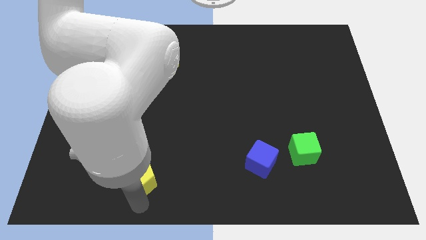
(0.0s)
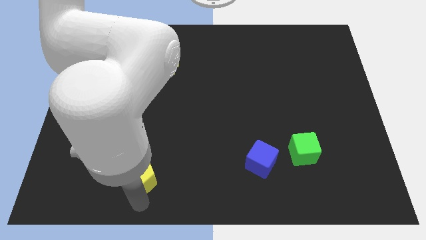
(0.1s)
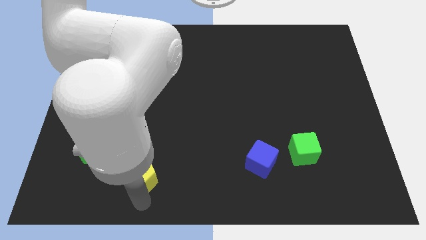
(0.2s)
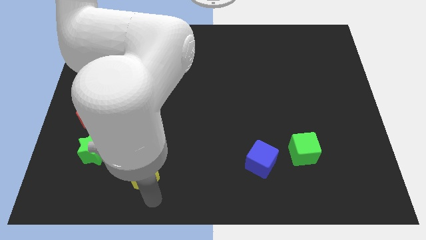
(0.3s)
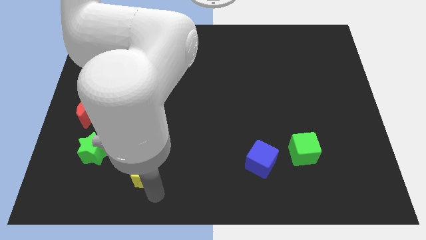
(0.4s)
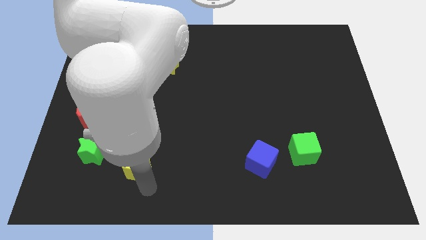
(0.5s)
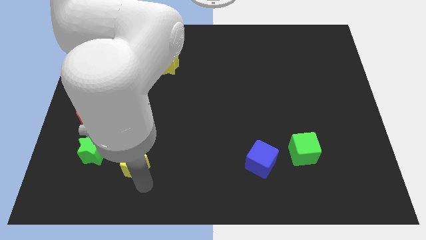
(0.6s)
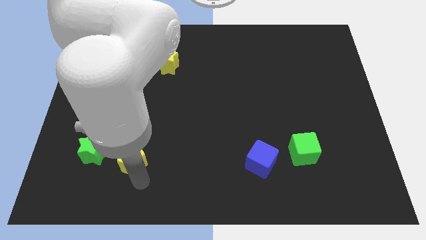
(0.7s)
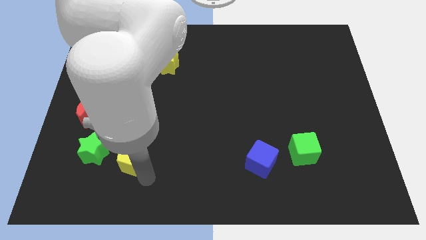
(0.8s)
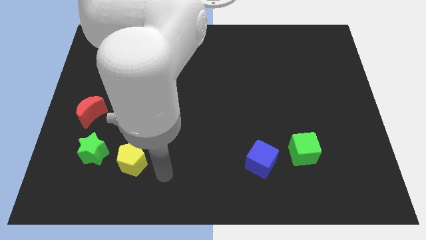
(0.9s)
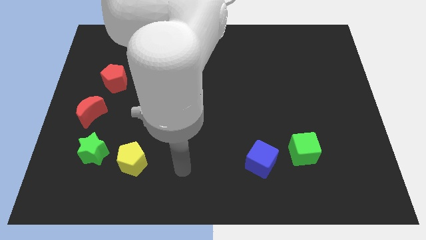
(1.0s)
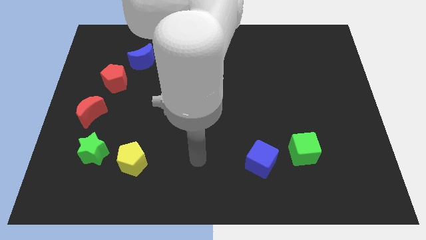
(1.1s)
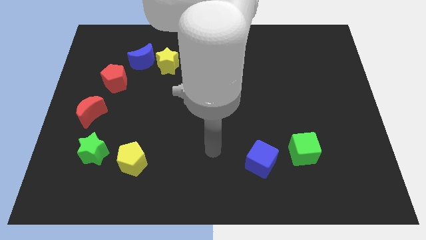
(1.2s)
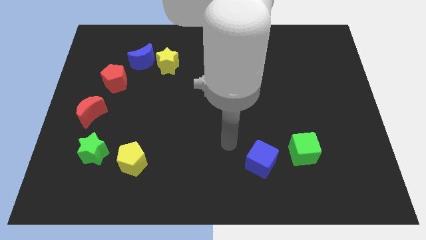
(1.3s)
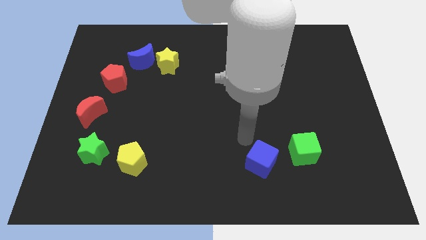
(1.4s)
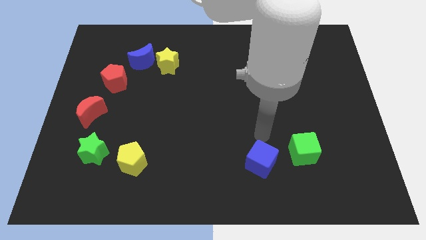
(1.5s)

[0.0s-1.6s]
push the yellow pentagon towards the green star

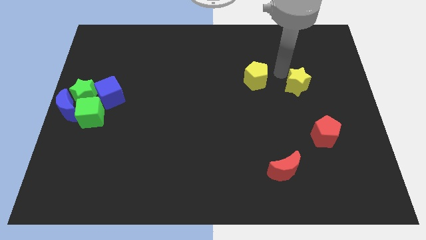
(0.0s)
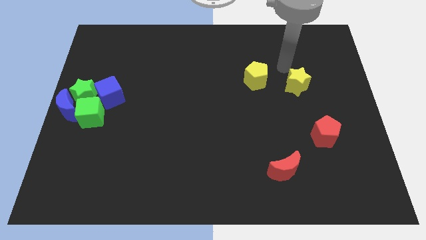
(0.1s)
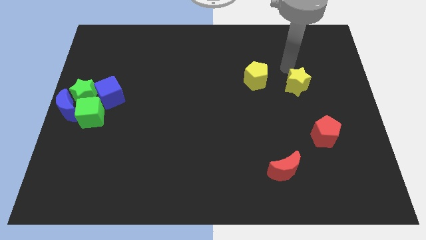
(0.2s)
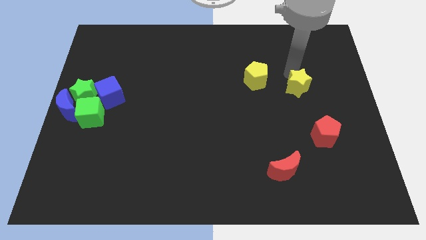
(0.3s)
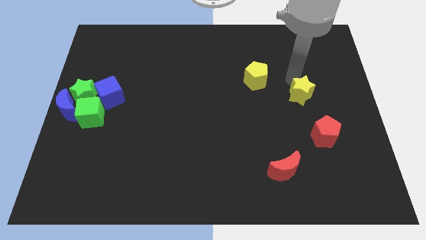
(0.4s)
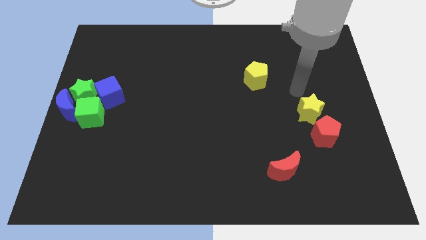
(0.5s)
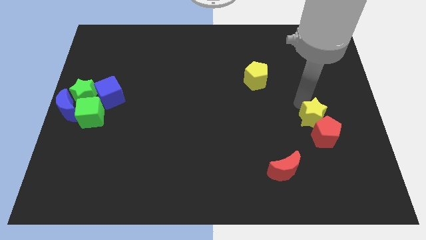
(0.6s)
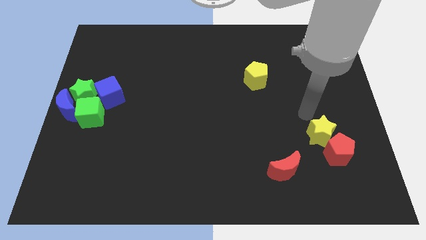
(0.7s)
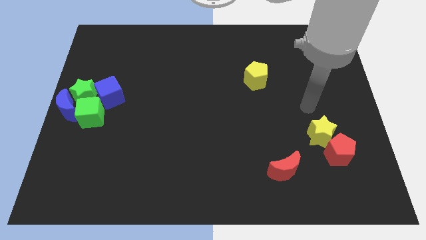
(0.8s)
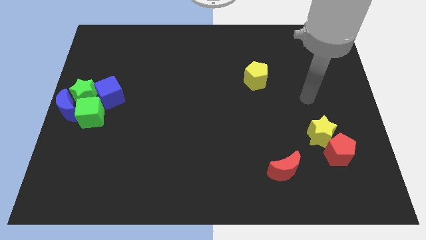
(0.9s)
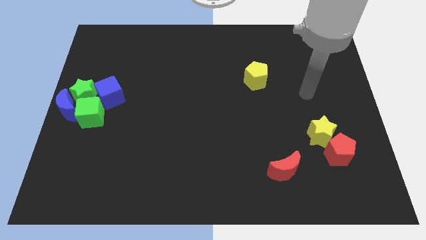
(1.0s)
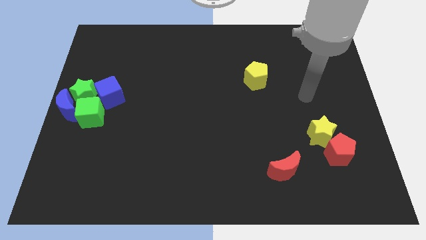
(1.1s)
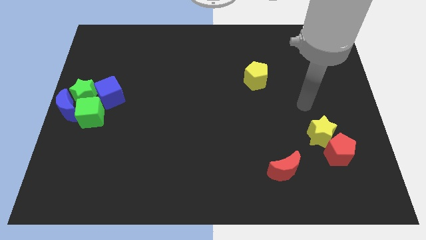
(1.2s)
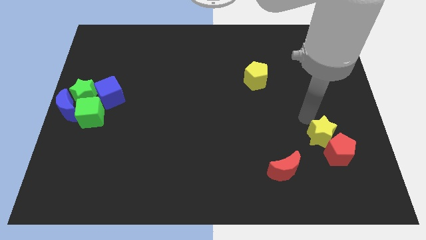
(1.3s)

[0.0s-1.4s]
slide the yellow star into the red pentagon

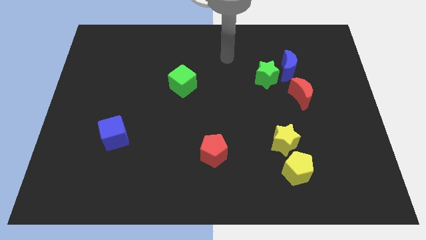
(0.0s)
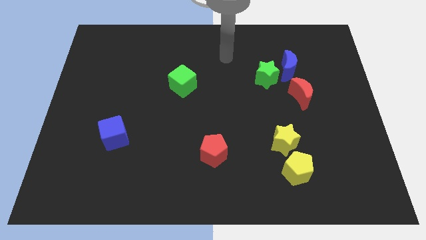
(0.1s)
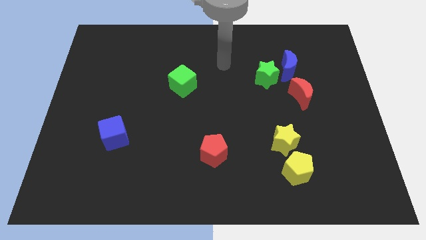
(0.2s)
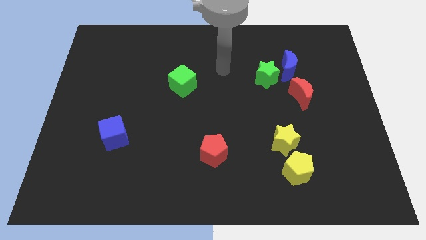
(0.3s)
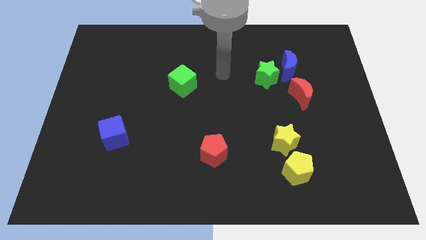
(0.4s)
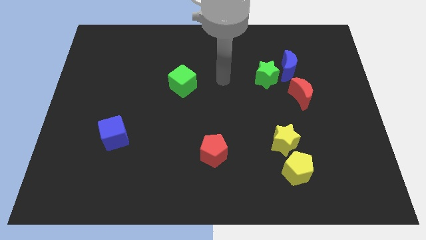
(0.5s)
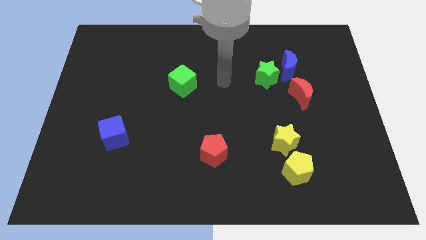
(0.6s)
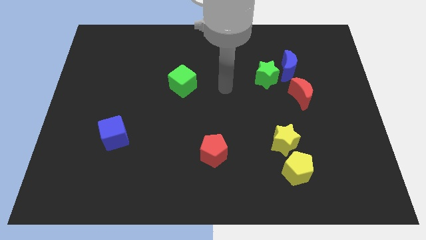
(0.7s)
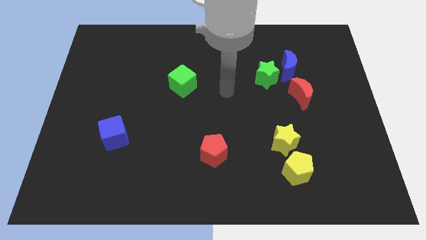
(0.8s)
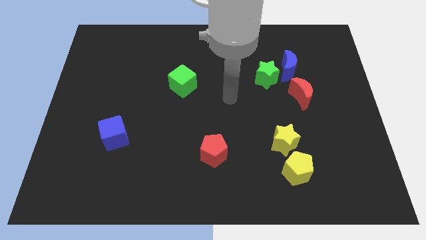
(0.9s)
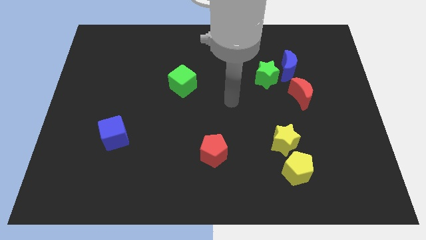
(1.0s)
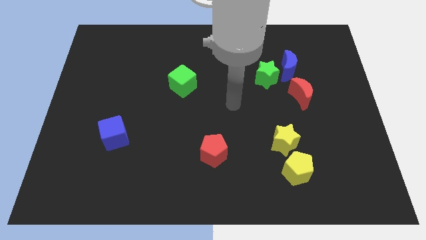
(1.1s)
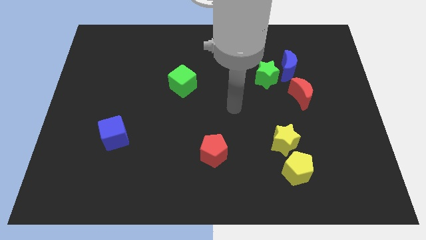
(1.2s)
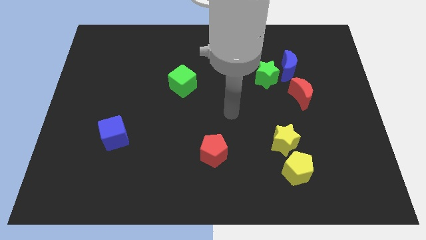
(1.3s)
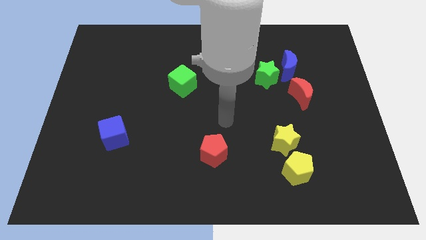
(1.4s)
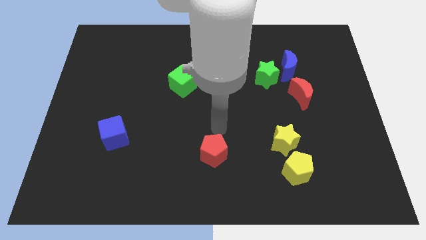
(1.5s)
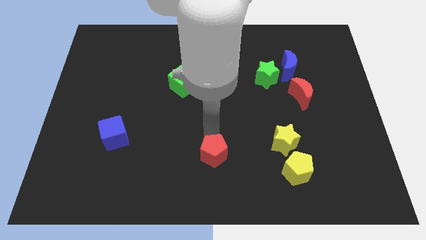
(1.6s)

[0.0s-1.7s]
place your hand vertically above the red pentagon

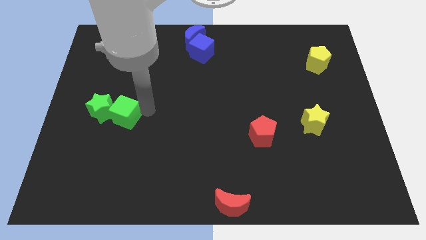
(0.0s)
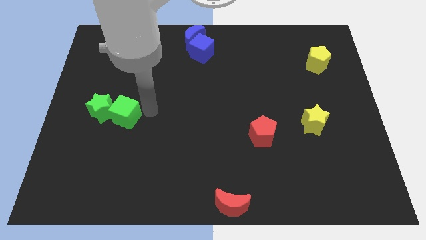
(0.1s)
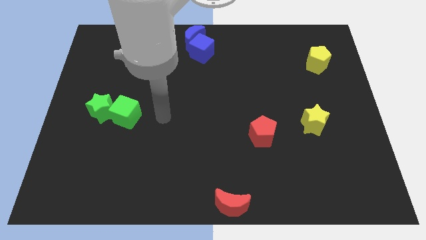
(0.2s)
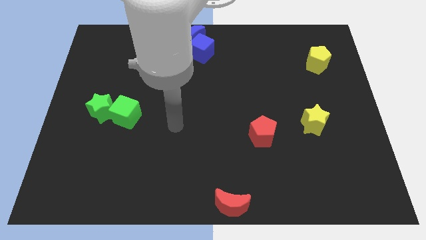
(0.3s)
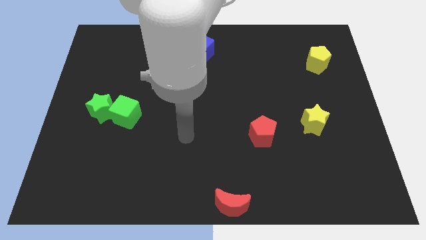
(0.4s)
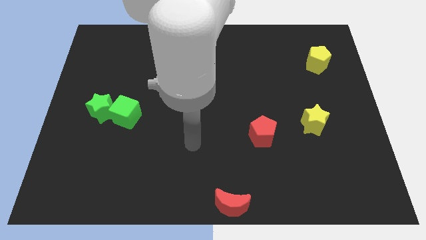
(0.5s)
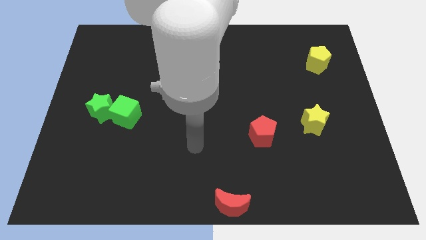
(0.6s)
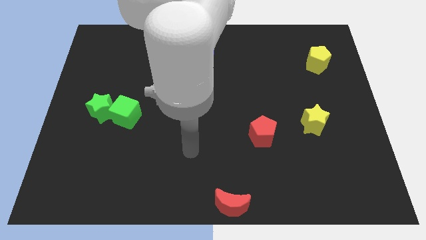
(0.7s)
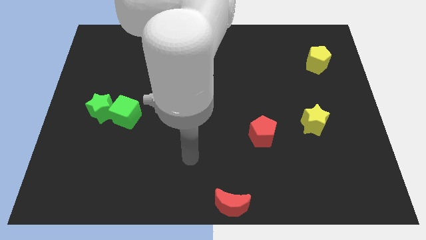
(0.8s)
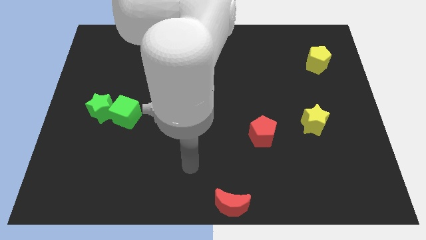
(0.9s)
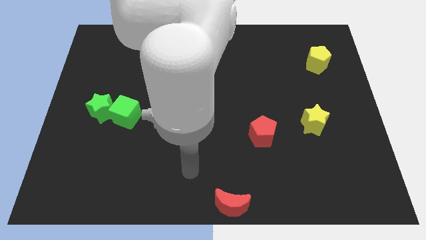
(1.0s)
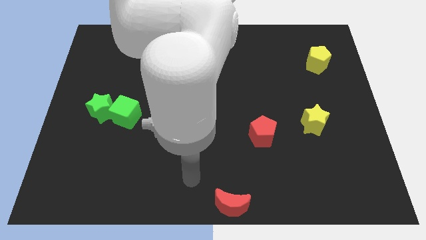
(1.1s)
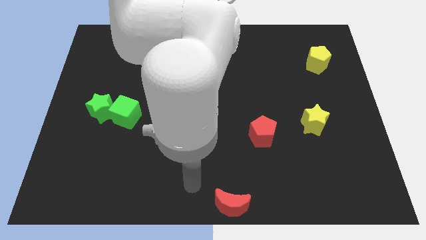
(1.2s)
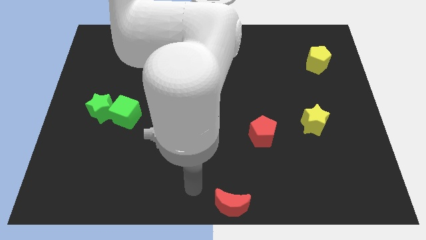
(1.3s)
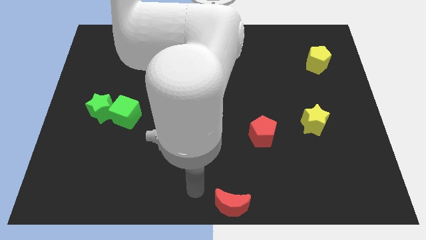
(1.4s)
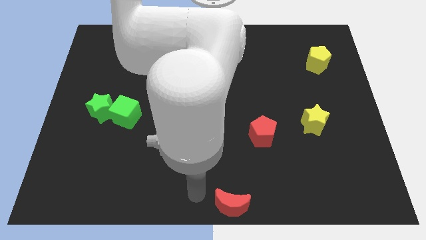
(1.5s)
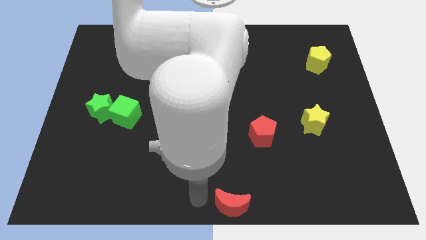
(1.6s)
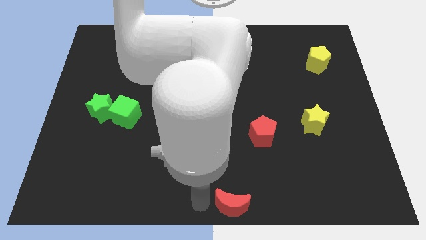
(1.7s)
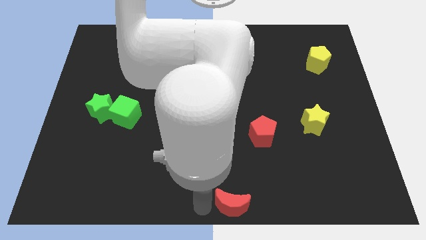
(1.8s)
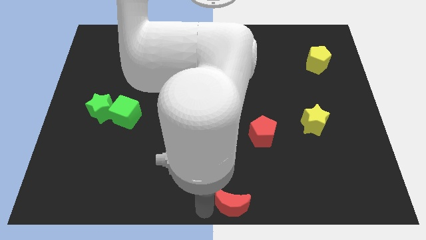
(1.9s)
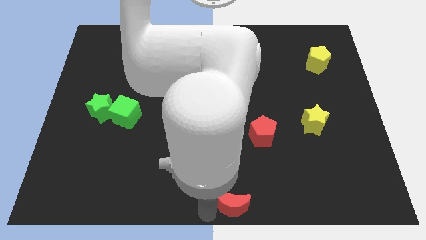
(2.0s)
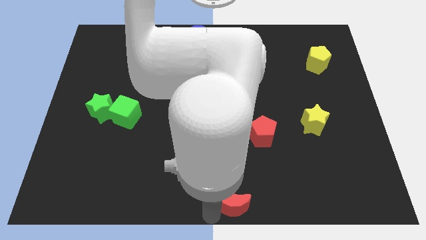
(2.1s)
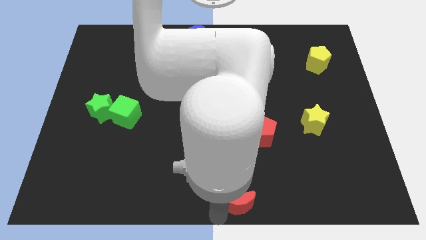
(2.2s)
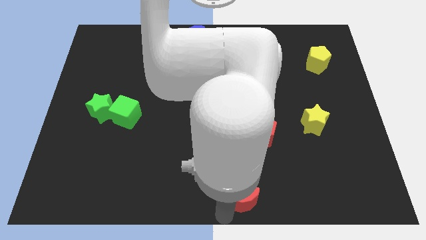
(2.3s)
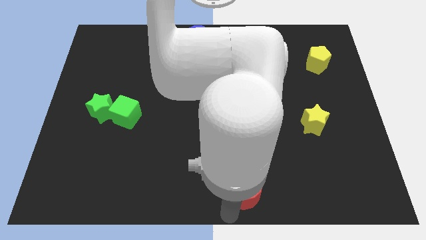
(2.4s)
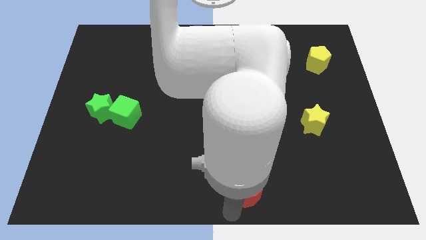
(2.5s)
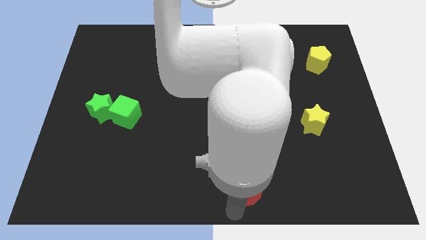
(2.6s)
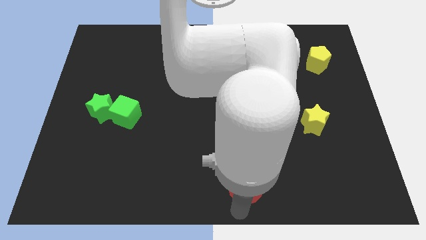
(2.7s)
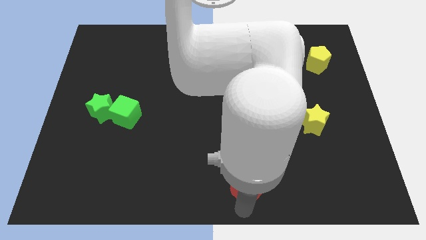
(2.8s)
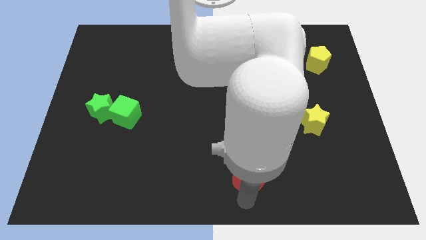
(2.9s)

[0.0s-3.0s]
push red crescent slightly upwards

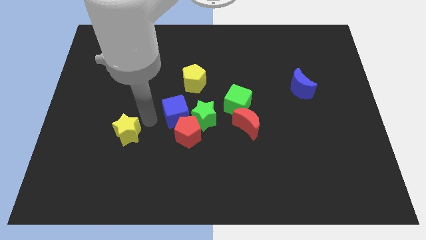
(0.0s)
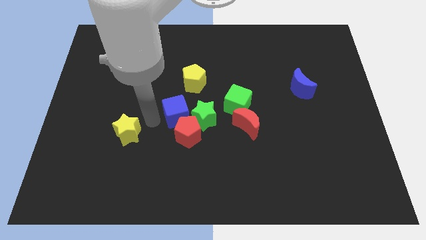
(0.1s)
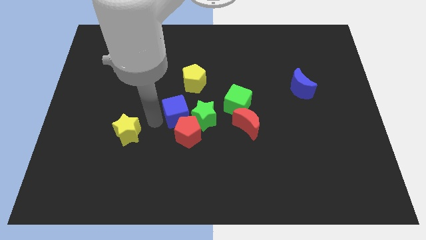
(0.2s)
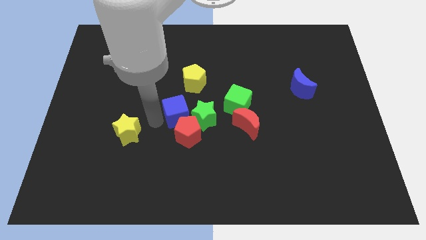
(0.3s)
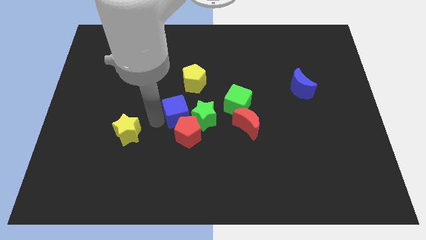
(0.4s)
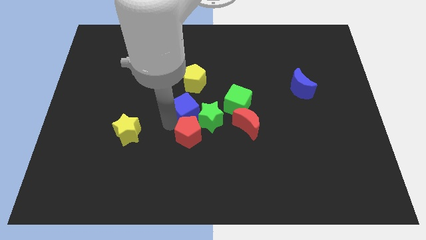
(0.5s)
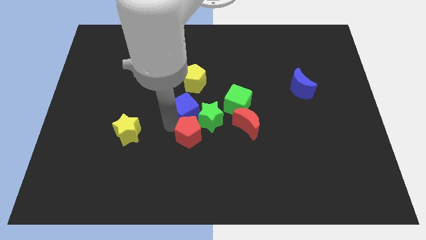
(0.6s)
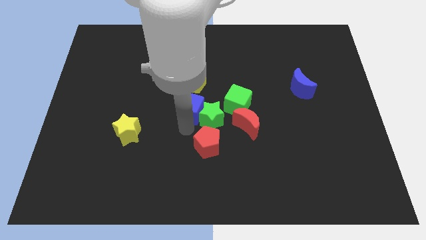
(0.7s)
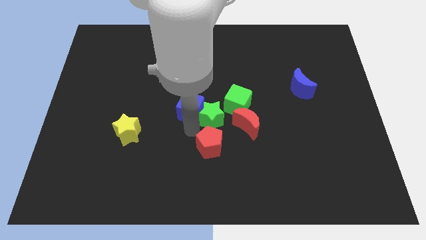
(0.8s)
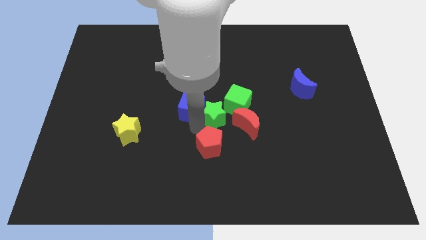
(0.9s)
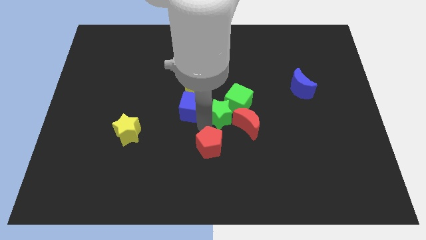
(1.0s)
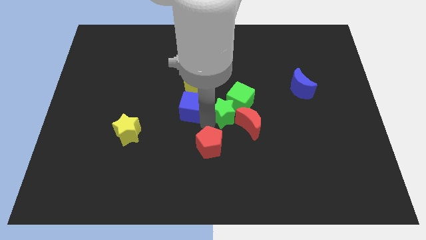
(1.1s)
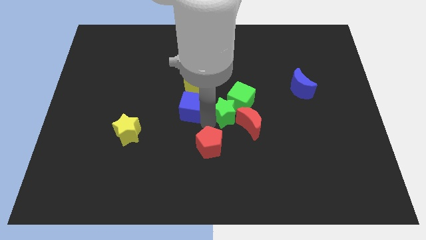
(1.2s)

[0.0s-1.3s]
push the blue cube into the green star

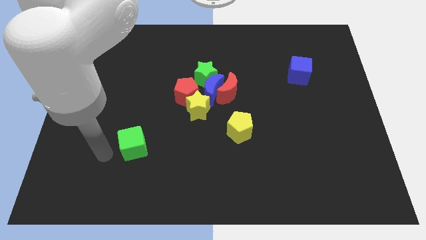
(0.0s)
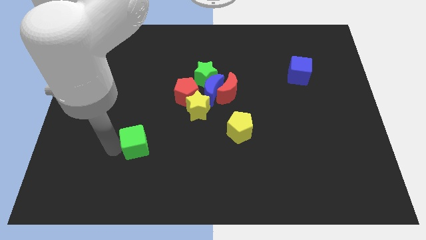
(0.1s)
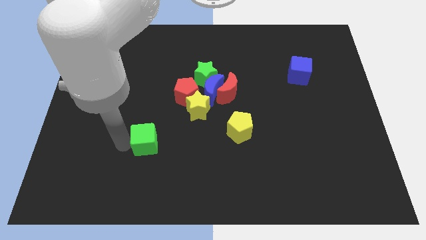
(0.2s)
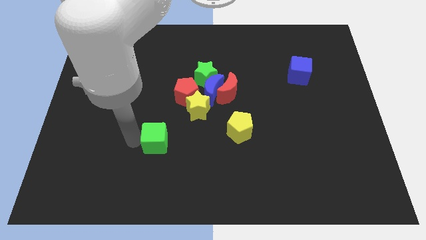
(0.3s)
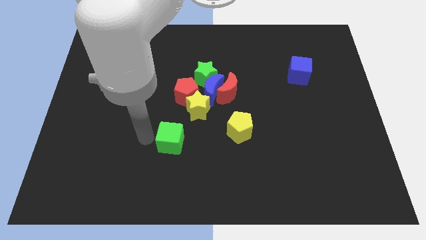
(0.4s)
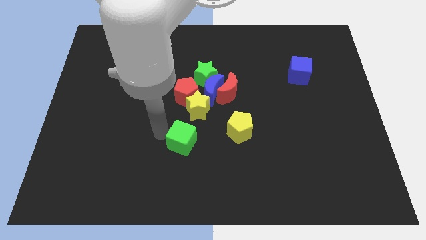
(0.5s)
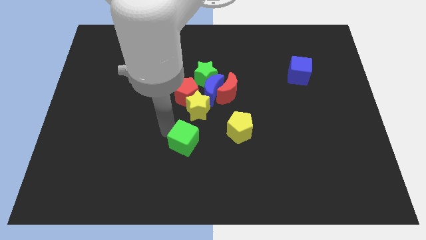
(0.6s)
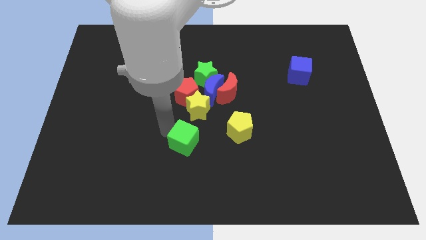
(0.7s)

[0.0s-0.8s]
place the green cube vertically below the yellow star
